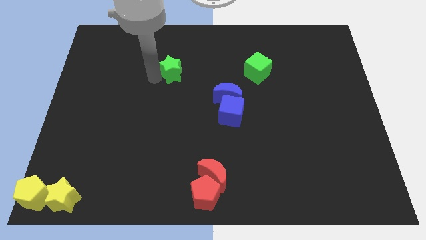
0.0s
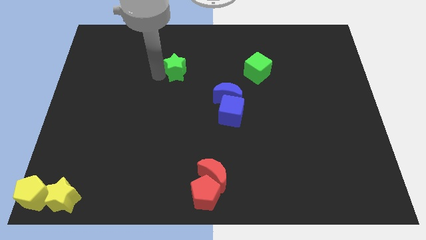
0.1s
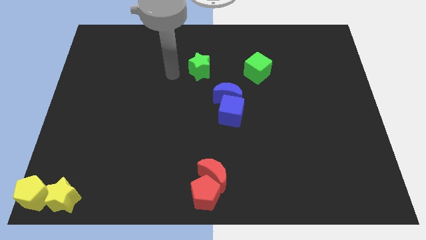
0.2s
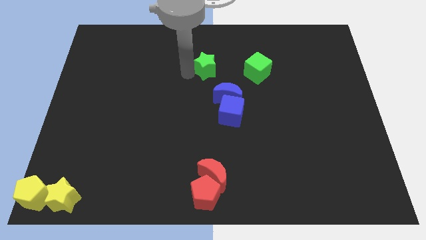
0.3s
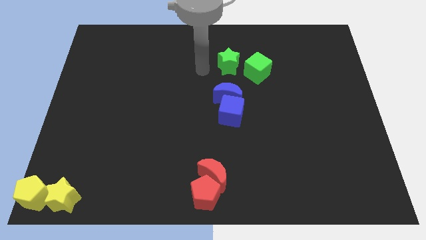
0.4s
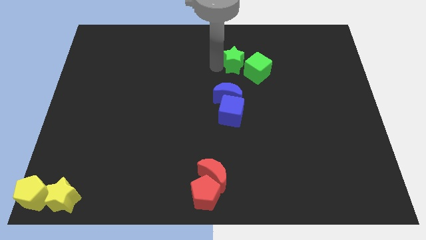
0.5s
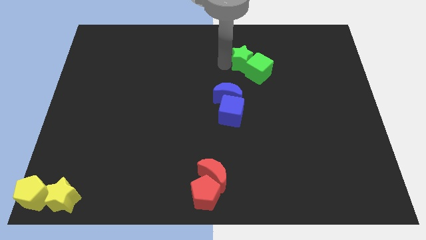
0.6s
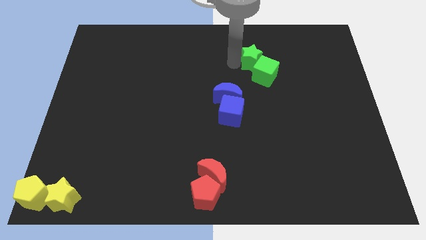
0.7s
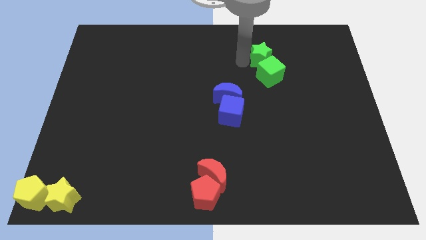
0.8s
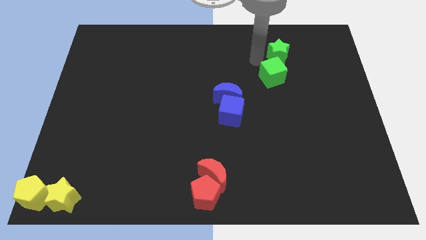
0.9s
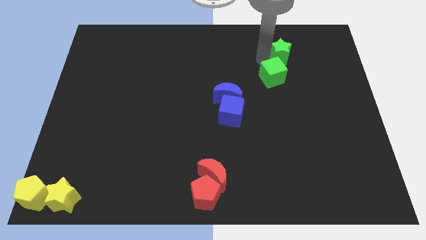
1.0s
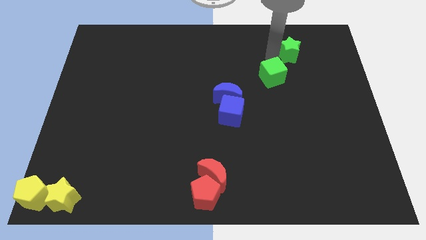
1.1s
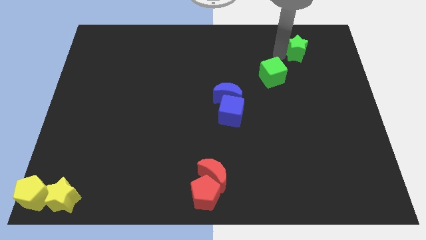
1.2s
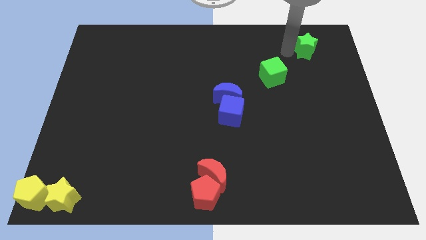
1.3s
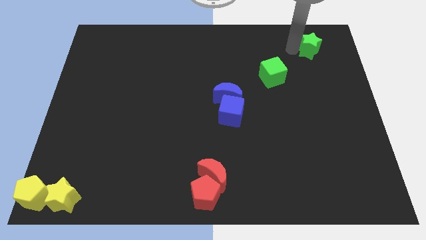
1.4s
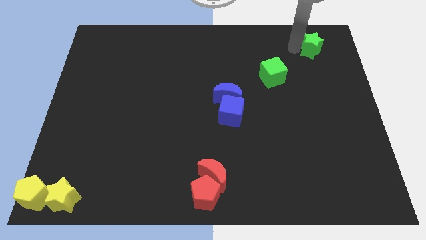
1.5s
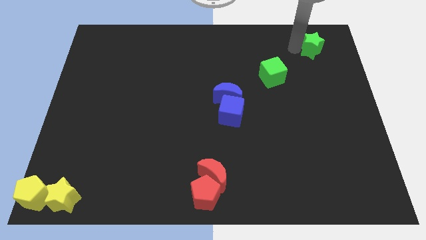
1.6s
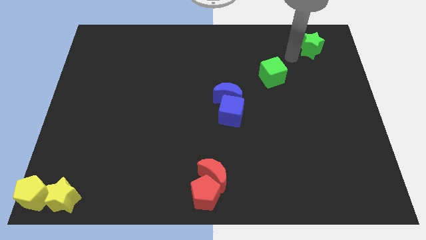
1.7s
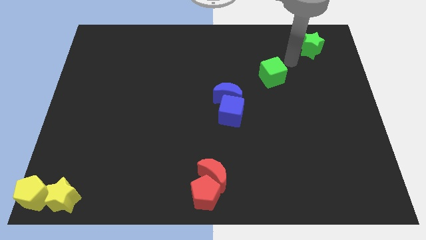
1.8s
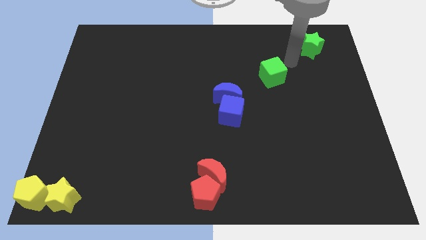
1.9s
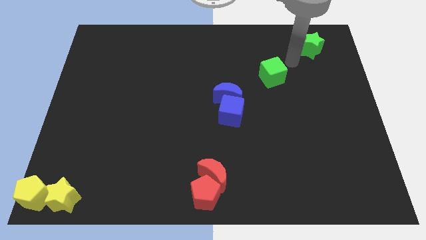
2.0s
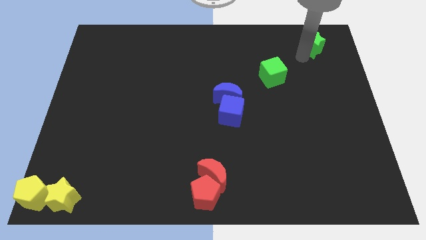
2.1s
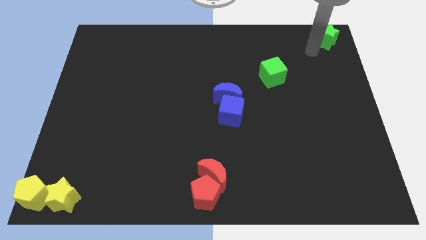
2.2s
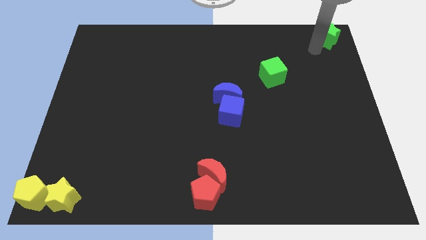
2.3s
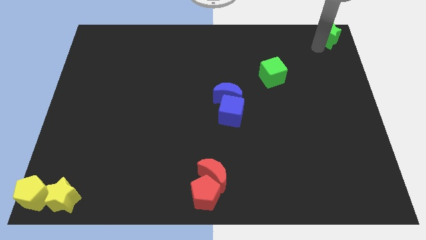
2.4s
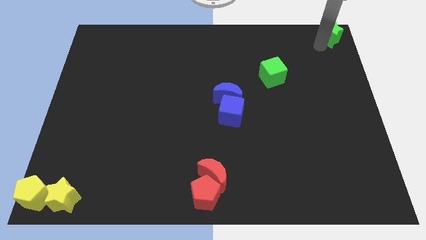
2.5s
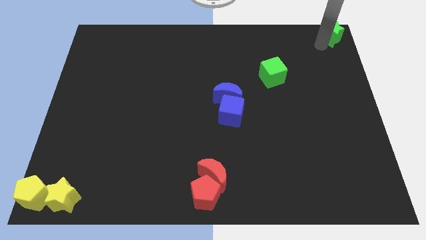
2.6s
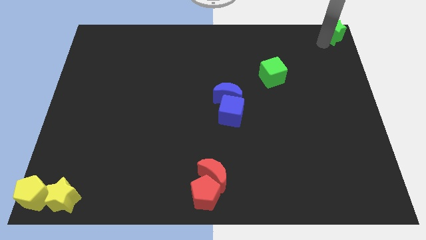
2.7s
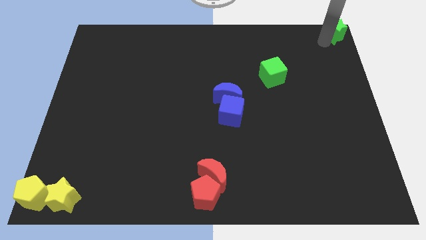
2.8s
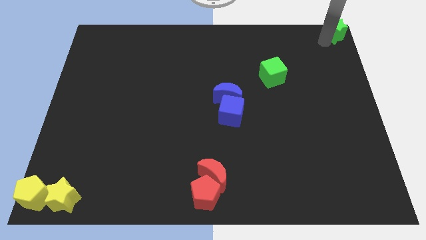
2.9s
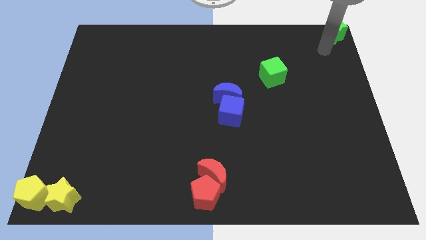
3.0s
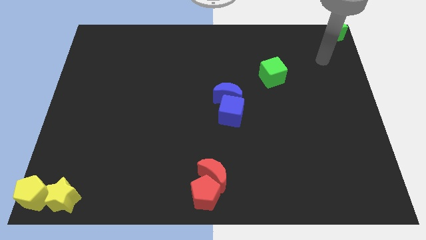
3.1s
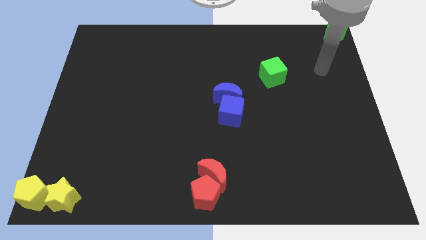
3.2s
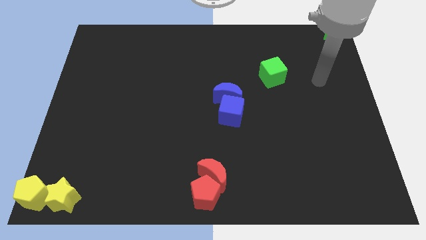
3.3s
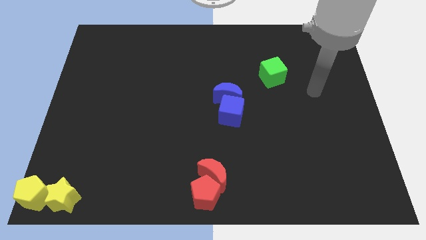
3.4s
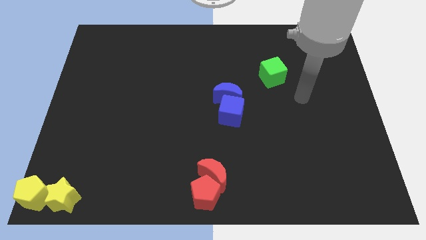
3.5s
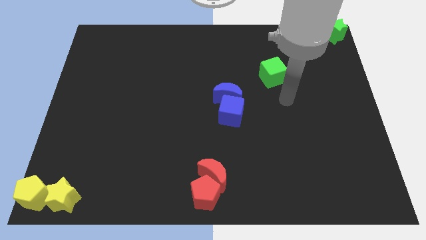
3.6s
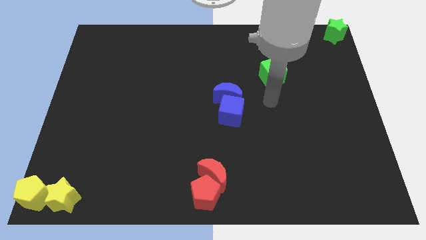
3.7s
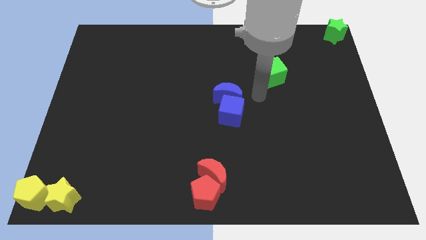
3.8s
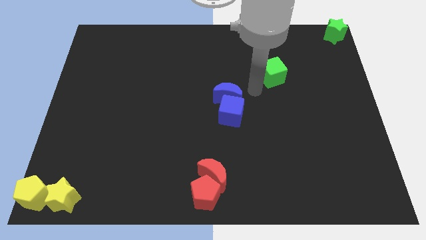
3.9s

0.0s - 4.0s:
place the green star at the top right corner of the board

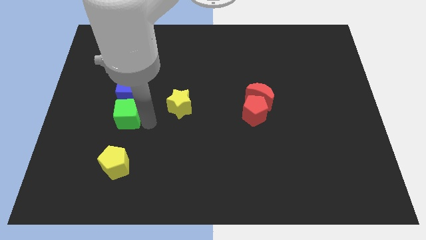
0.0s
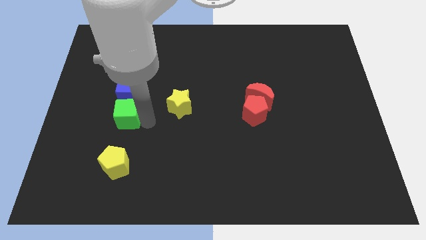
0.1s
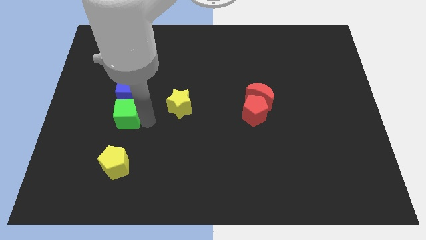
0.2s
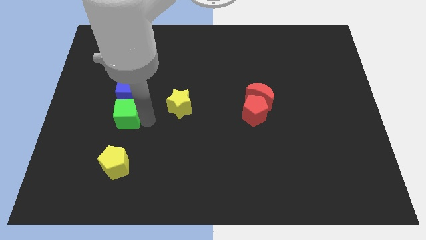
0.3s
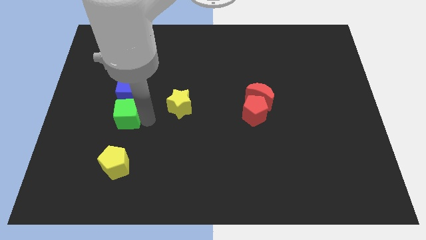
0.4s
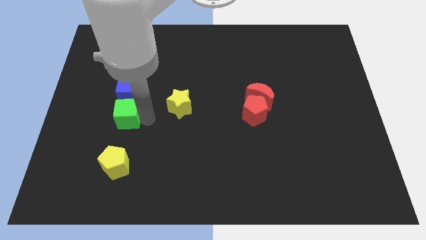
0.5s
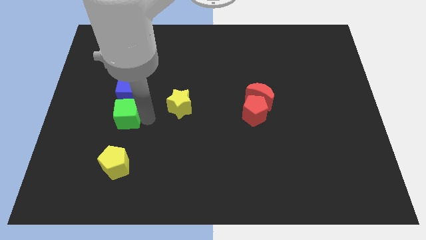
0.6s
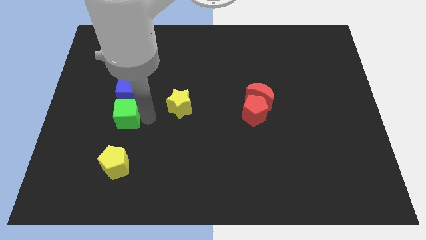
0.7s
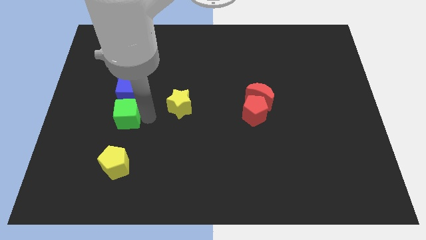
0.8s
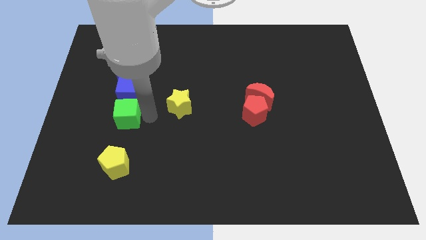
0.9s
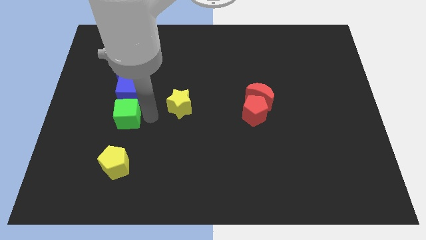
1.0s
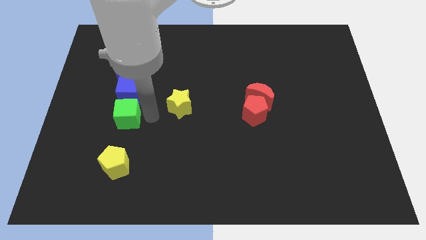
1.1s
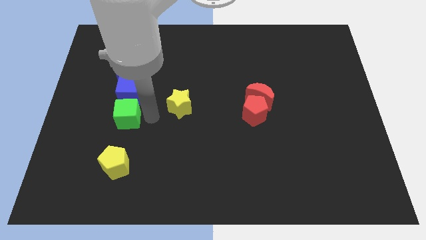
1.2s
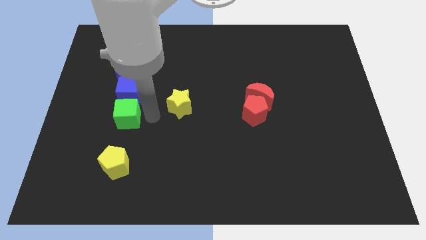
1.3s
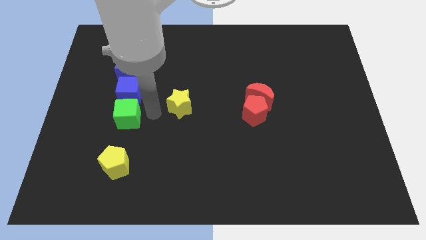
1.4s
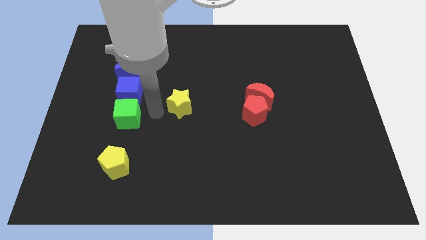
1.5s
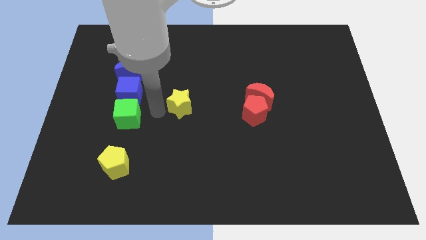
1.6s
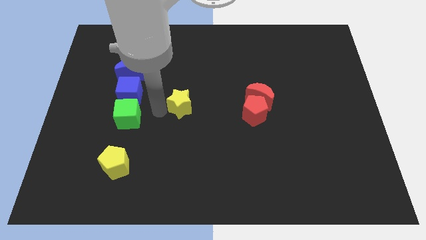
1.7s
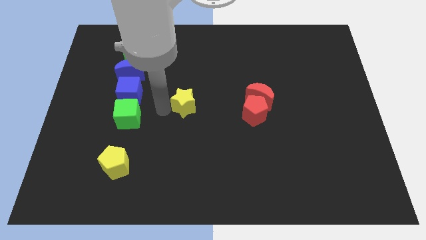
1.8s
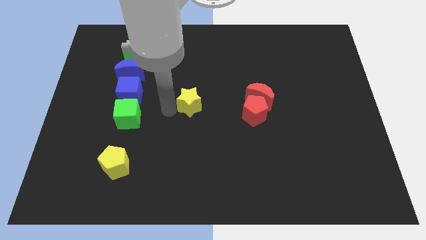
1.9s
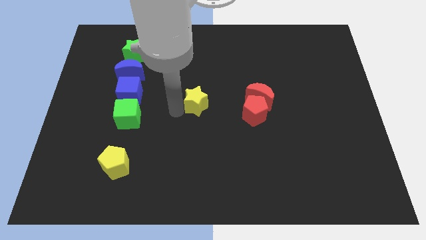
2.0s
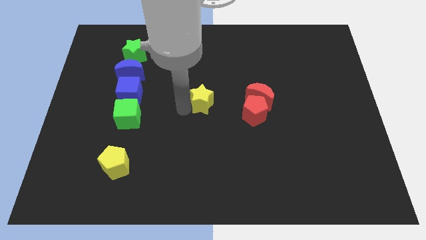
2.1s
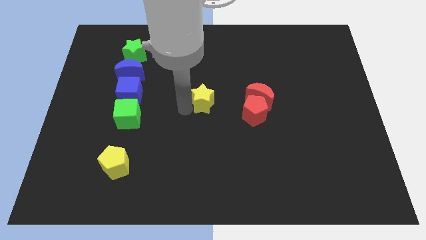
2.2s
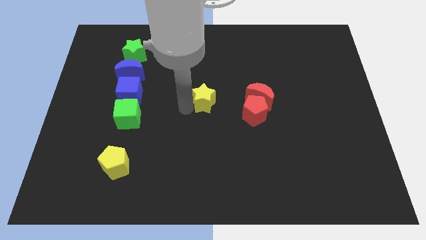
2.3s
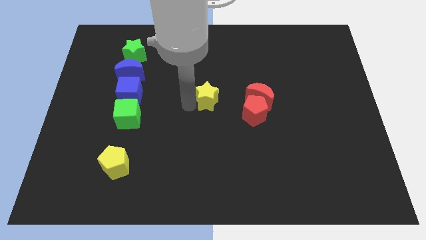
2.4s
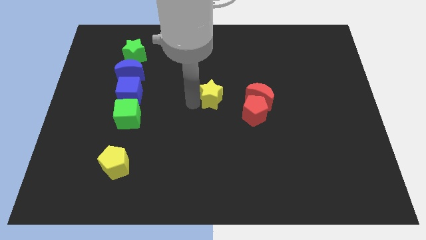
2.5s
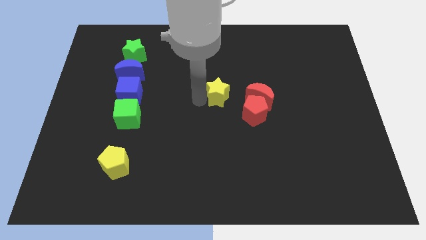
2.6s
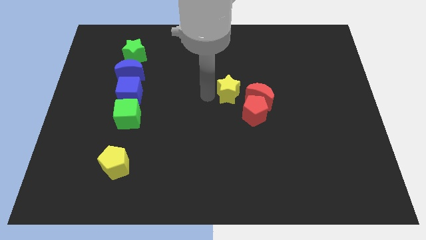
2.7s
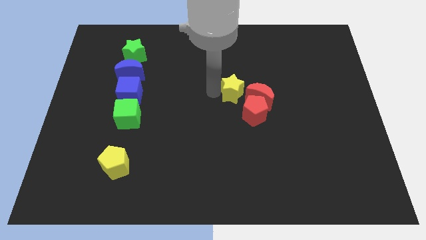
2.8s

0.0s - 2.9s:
place the yellow star left to the red moon

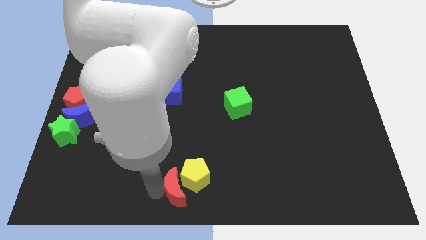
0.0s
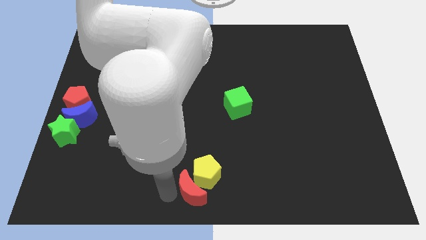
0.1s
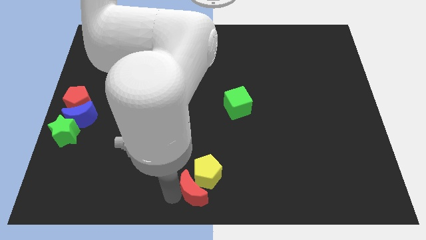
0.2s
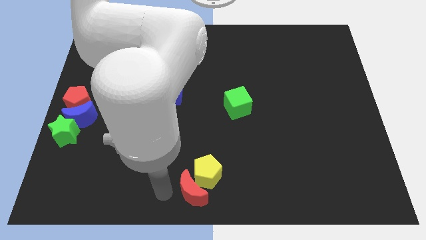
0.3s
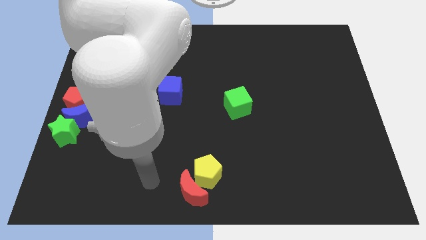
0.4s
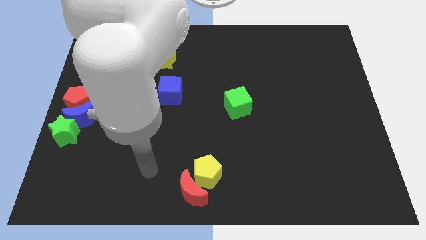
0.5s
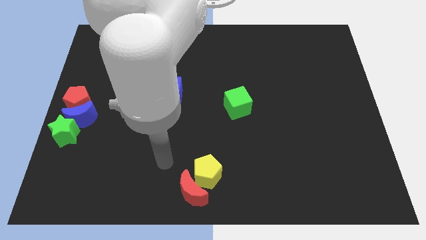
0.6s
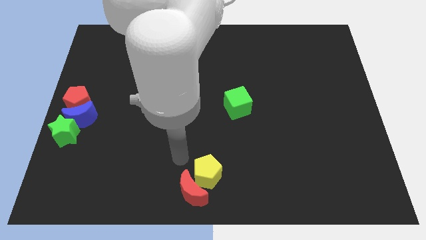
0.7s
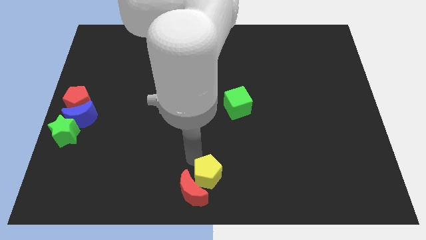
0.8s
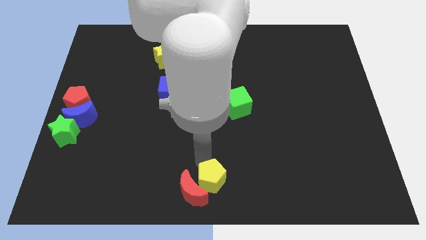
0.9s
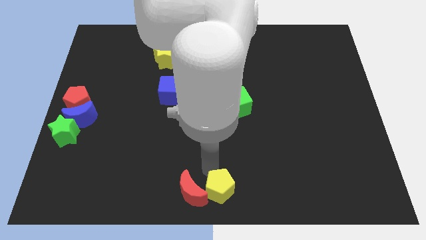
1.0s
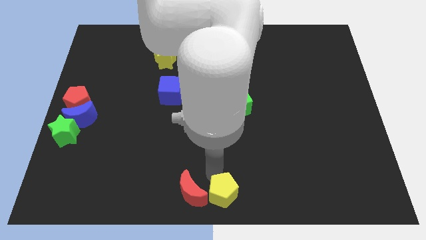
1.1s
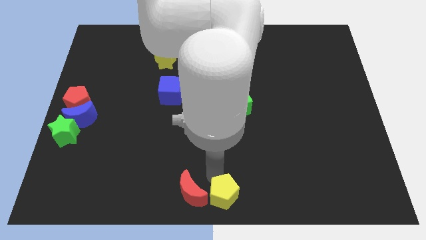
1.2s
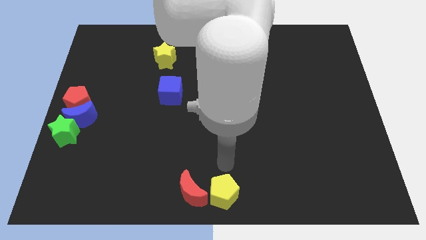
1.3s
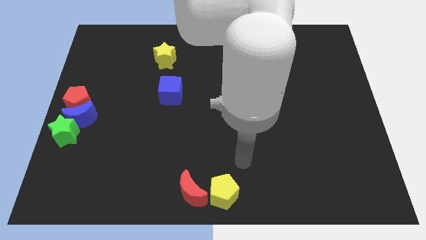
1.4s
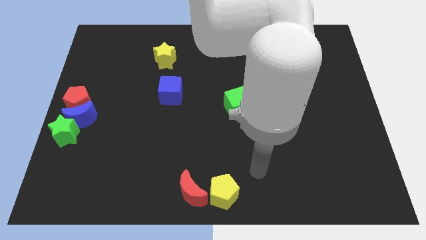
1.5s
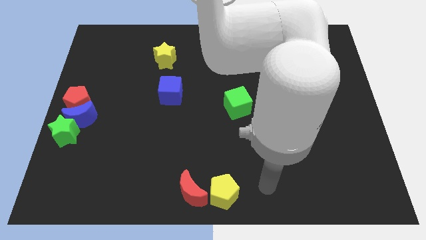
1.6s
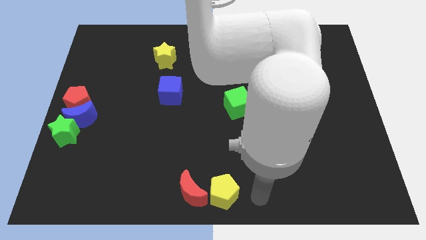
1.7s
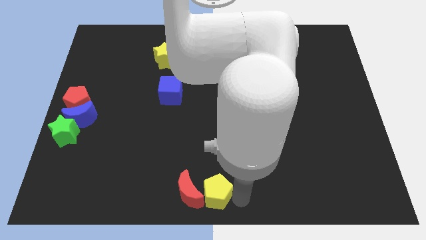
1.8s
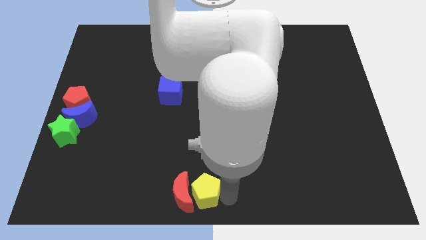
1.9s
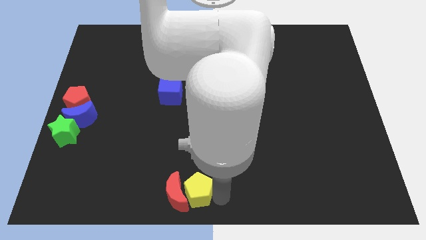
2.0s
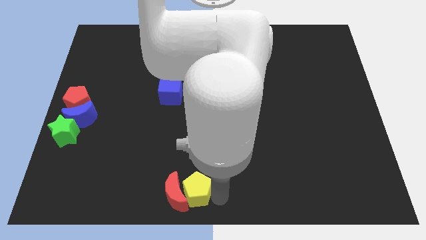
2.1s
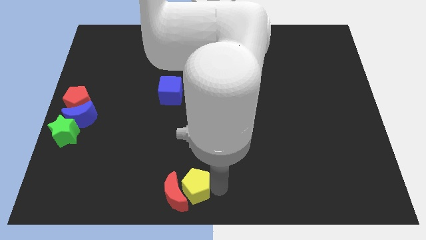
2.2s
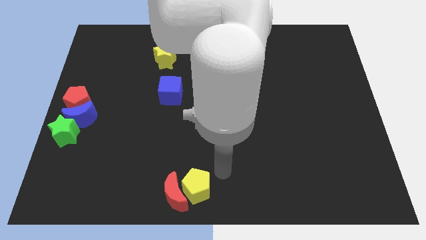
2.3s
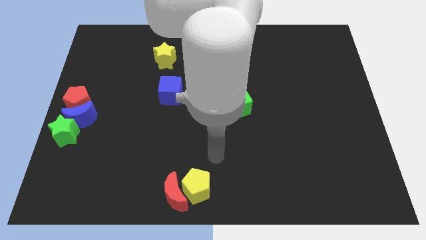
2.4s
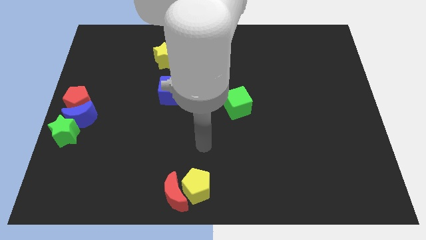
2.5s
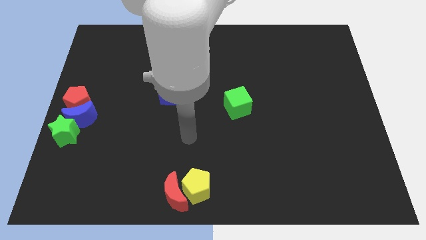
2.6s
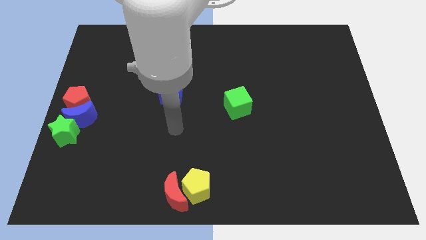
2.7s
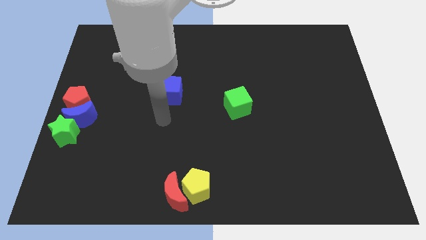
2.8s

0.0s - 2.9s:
place red moon and yellow pentagon to the bottom
